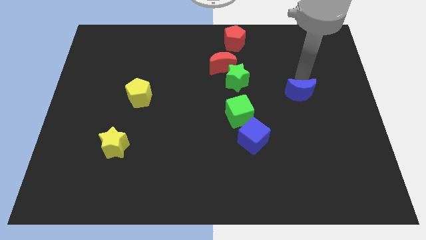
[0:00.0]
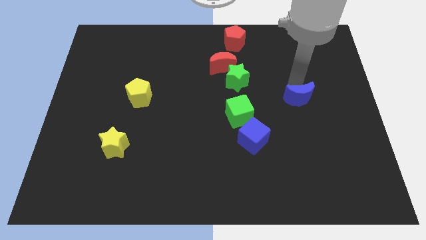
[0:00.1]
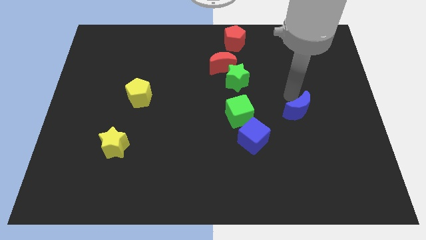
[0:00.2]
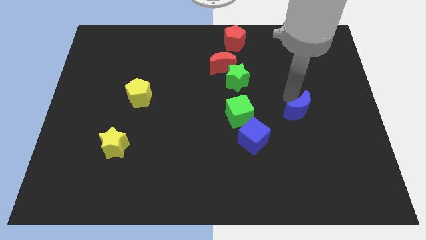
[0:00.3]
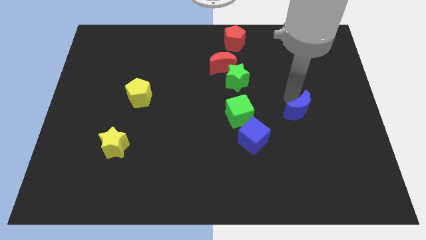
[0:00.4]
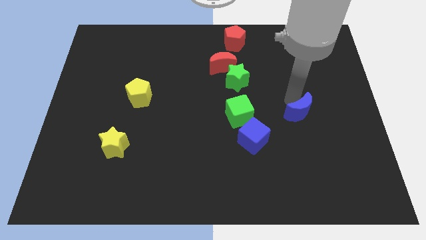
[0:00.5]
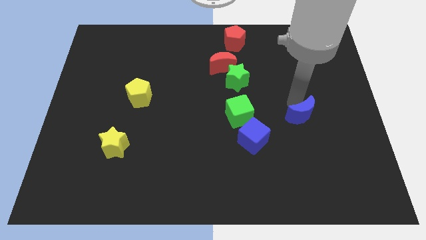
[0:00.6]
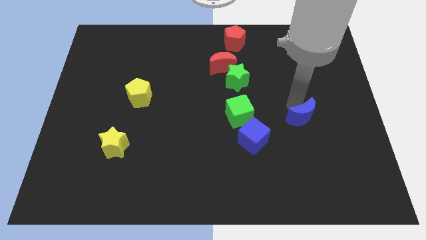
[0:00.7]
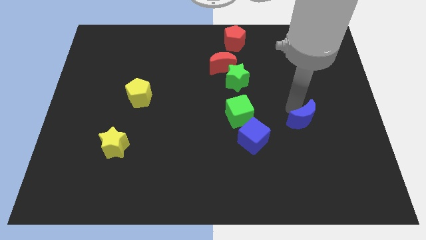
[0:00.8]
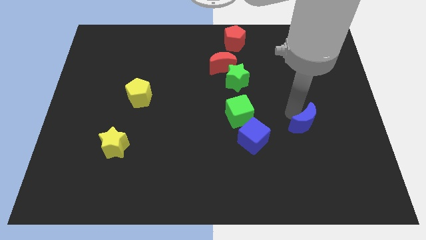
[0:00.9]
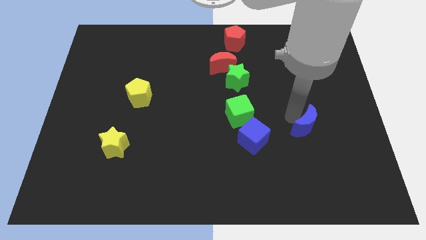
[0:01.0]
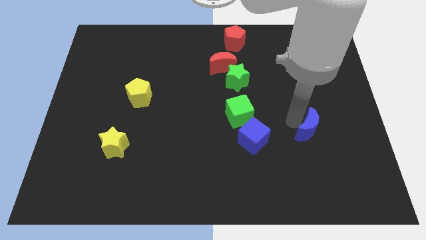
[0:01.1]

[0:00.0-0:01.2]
move the blue moon downward

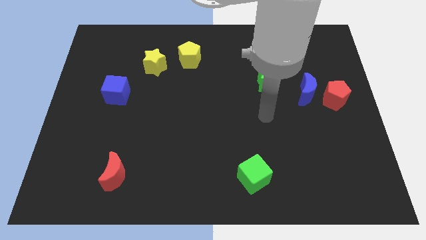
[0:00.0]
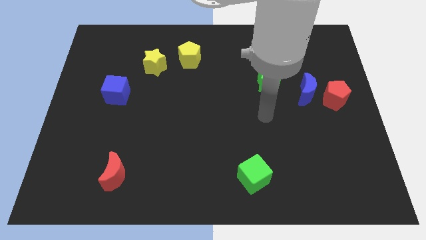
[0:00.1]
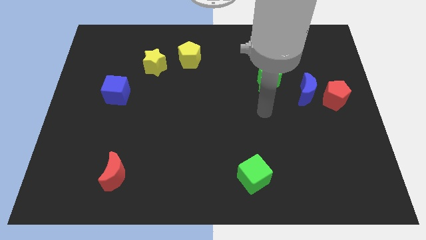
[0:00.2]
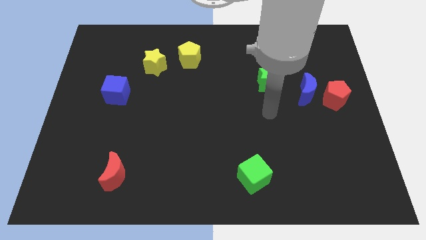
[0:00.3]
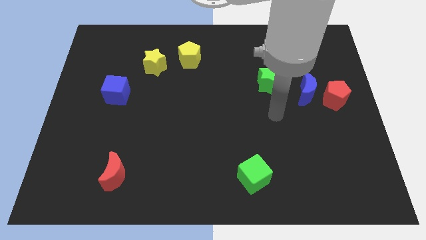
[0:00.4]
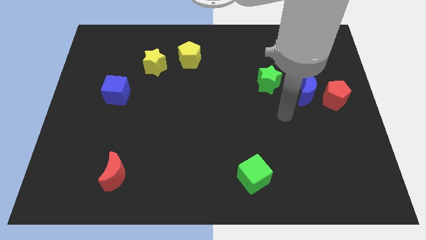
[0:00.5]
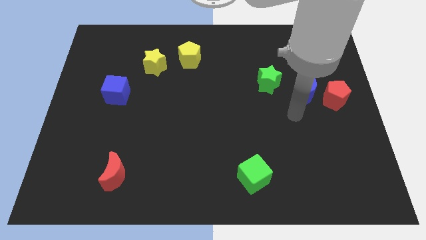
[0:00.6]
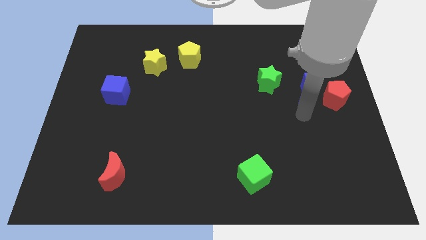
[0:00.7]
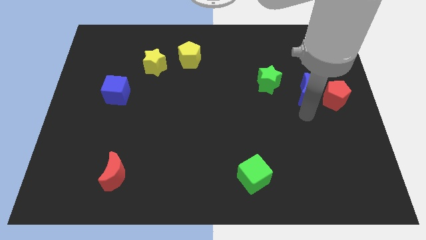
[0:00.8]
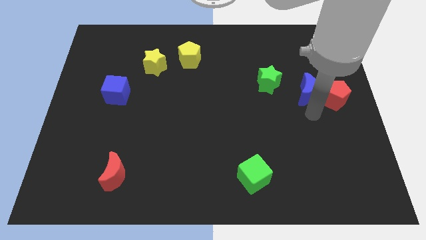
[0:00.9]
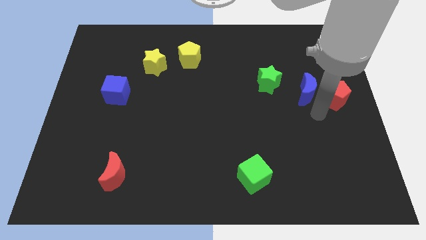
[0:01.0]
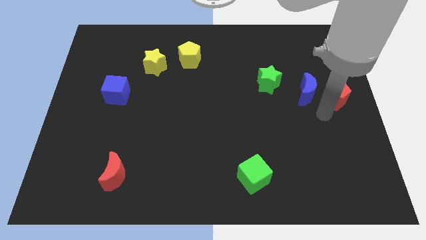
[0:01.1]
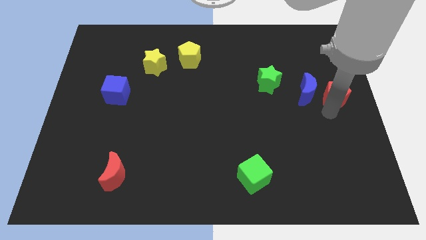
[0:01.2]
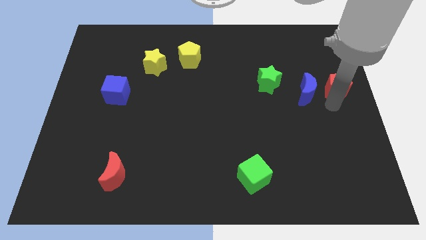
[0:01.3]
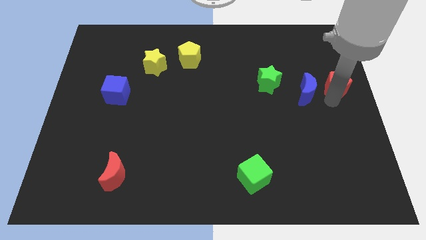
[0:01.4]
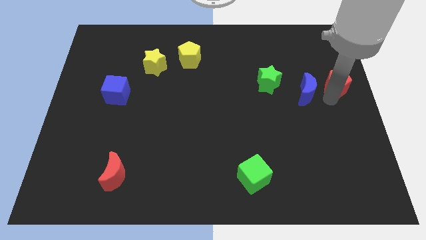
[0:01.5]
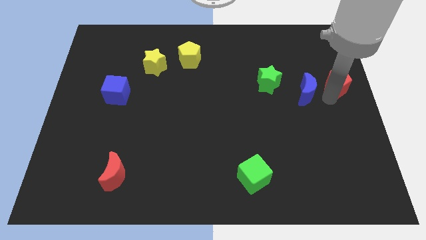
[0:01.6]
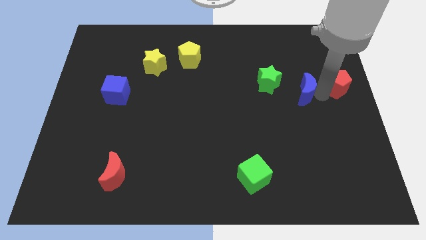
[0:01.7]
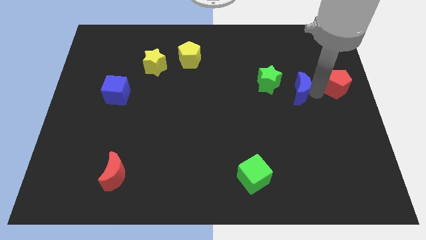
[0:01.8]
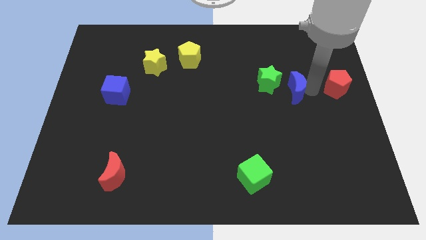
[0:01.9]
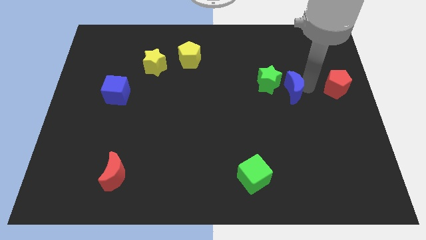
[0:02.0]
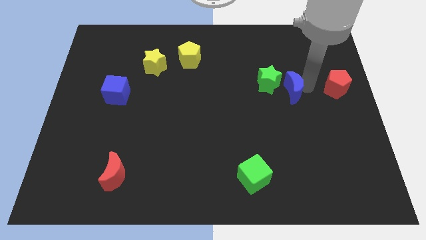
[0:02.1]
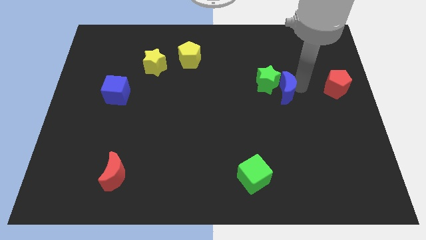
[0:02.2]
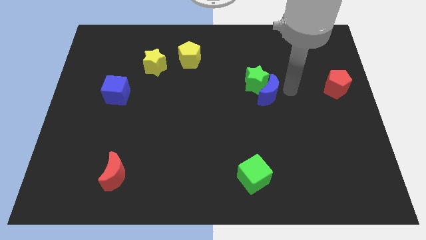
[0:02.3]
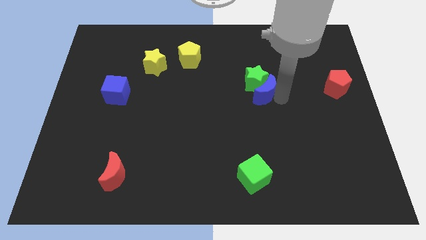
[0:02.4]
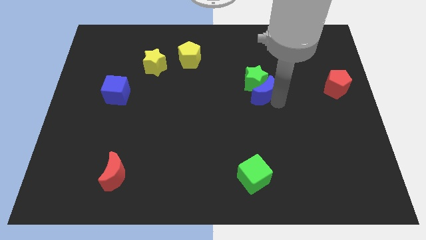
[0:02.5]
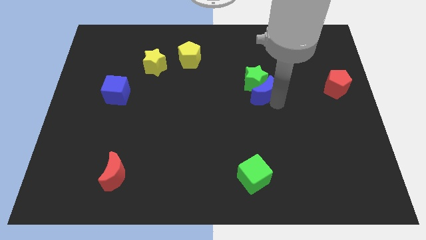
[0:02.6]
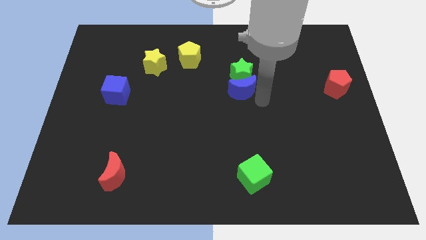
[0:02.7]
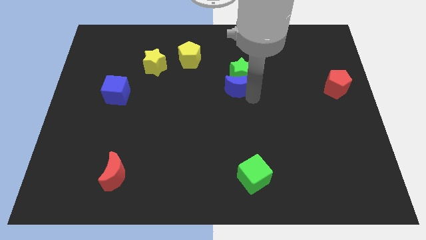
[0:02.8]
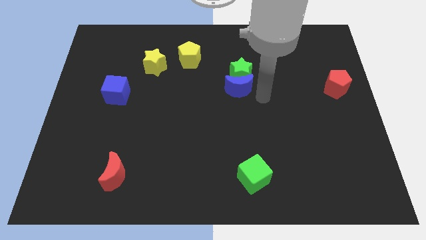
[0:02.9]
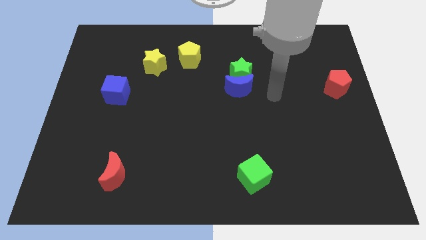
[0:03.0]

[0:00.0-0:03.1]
place the blue crescent at the bottom side of the green star

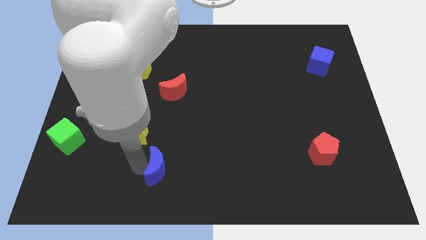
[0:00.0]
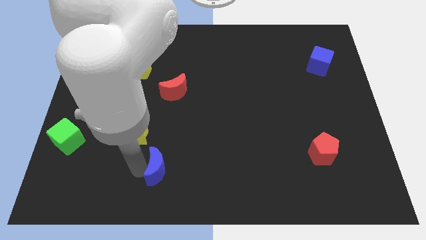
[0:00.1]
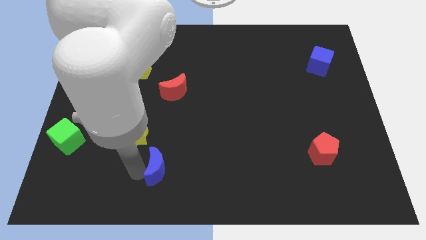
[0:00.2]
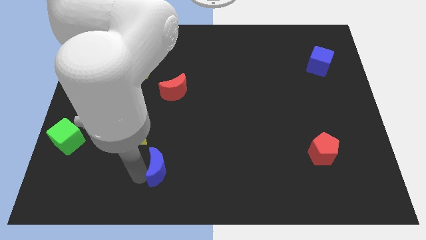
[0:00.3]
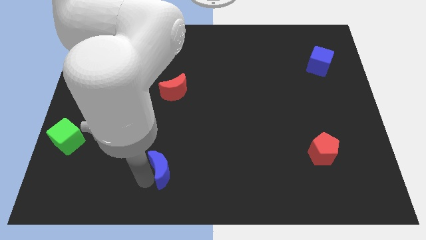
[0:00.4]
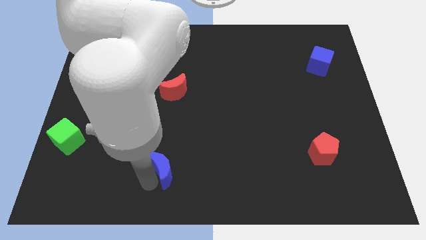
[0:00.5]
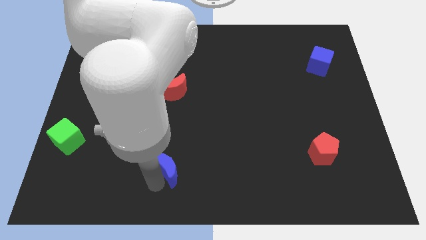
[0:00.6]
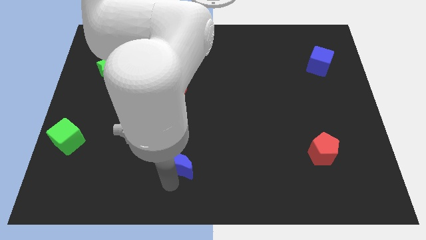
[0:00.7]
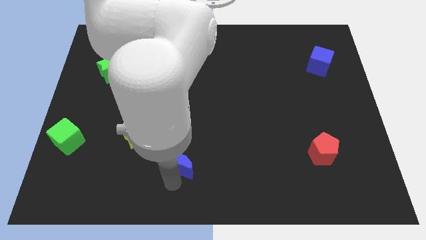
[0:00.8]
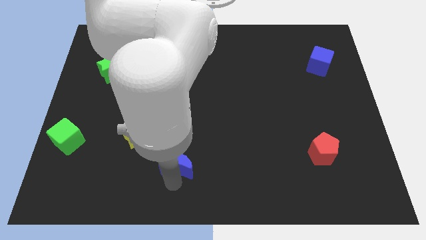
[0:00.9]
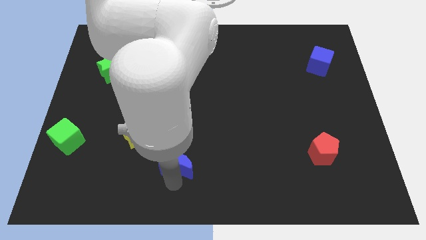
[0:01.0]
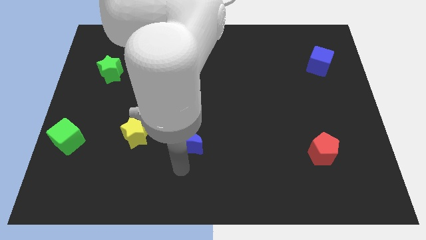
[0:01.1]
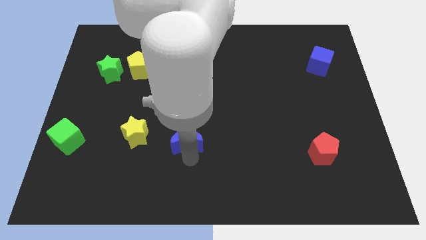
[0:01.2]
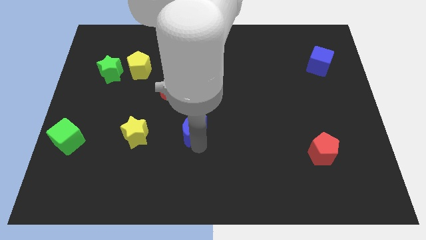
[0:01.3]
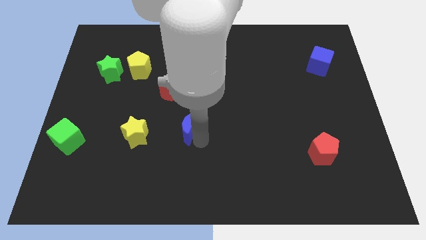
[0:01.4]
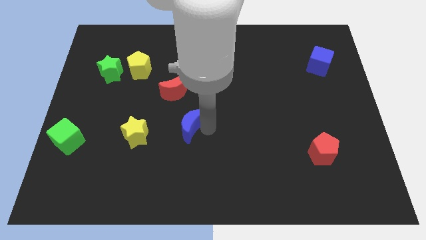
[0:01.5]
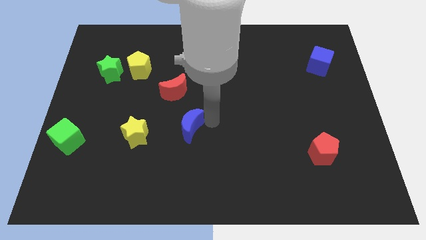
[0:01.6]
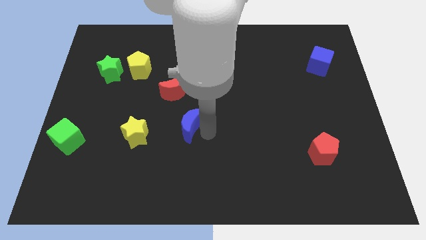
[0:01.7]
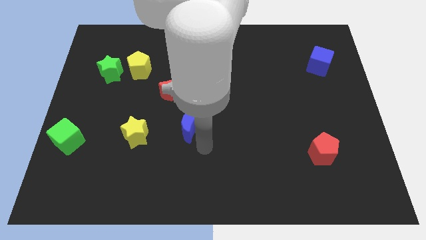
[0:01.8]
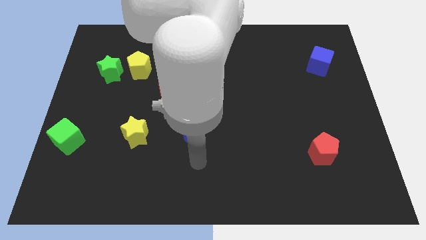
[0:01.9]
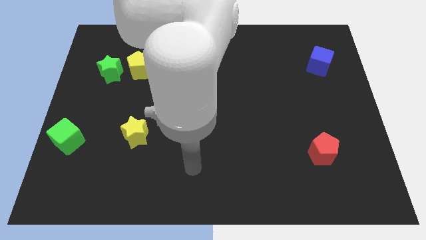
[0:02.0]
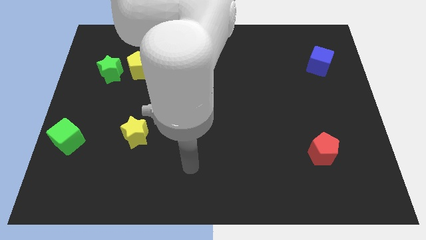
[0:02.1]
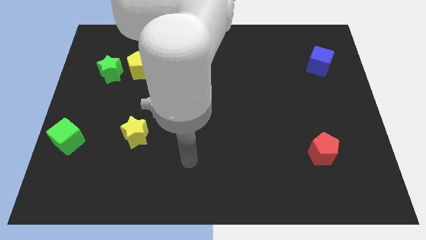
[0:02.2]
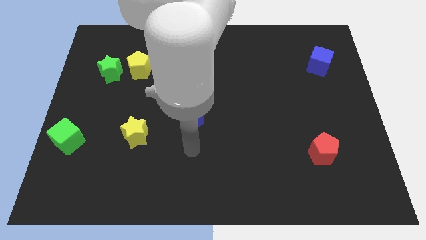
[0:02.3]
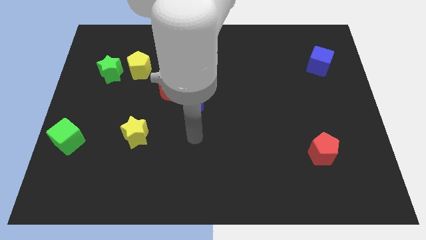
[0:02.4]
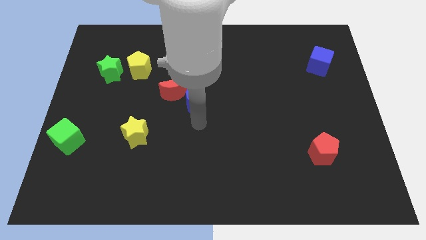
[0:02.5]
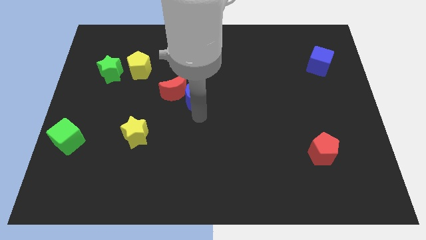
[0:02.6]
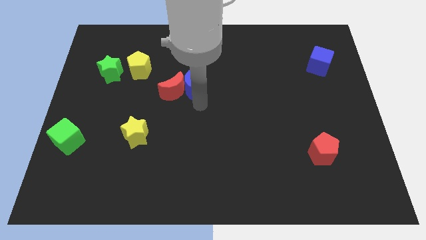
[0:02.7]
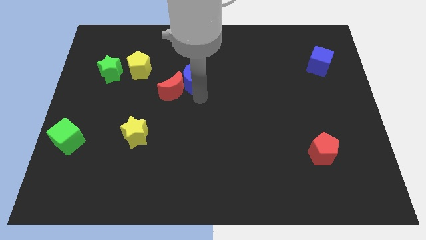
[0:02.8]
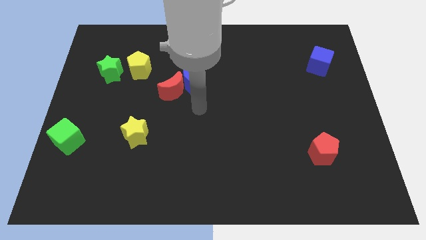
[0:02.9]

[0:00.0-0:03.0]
move blue moon into the red moon

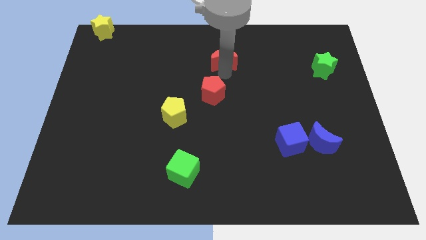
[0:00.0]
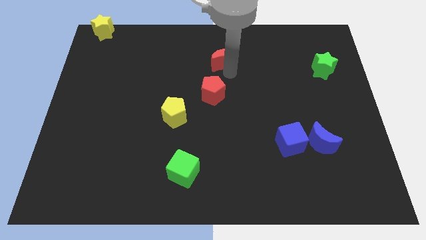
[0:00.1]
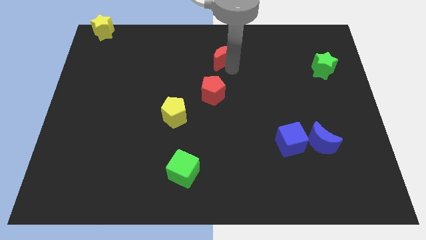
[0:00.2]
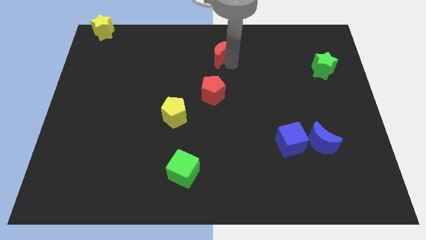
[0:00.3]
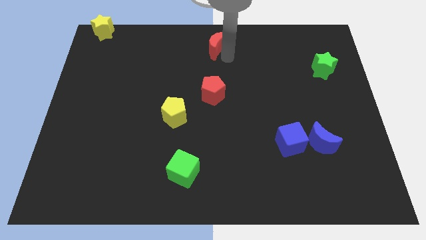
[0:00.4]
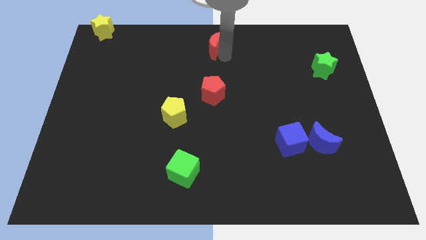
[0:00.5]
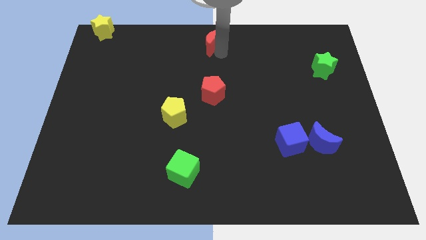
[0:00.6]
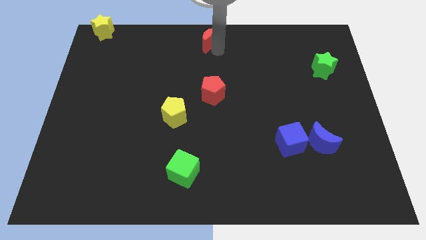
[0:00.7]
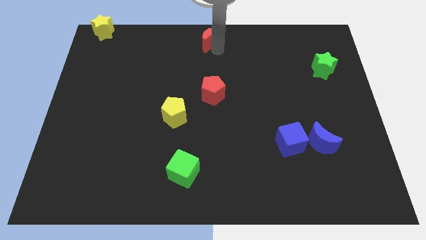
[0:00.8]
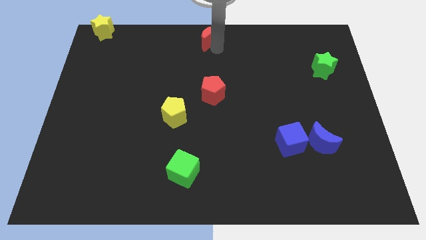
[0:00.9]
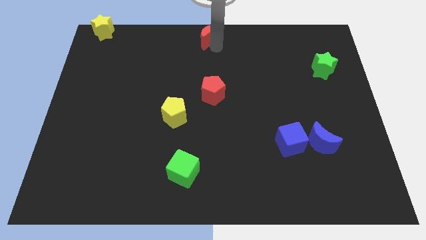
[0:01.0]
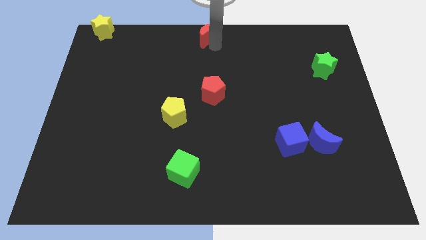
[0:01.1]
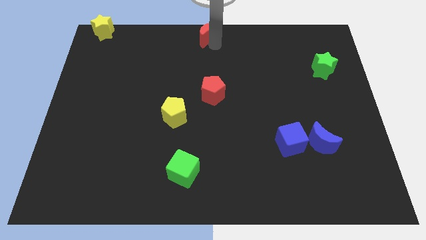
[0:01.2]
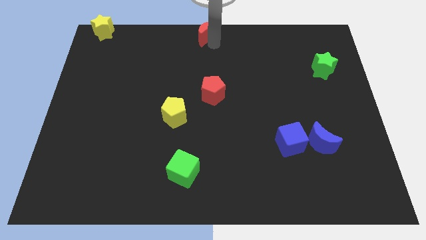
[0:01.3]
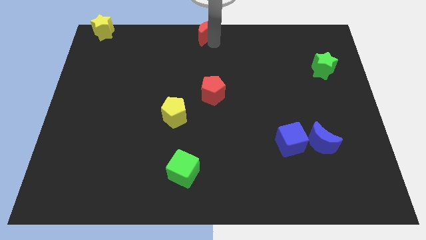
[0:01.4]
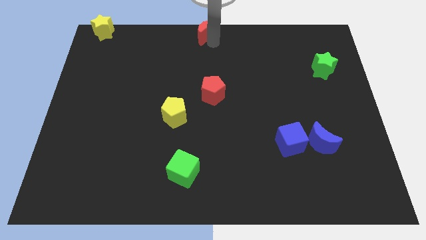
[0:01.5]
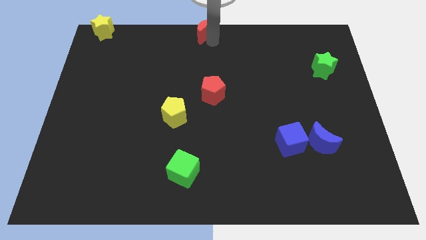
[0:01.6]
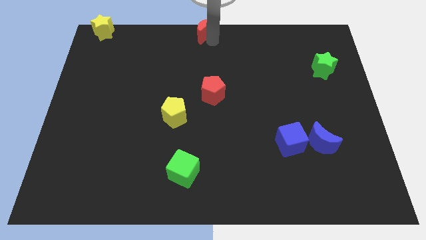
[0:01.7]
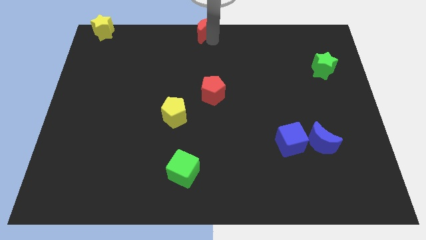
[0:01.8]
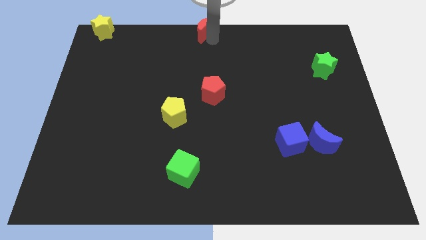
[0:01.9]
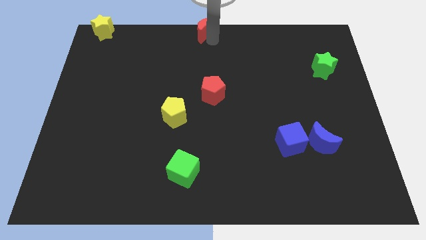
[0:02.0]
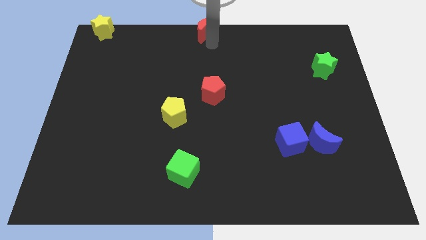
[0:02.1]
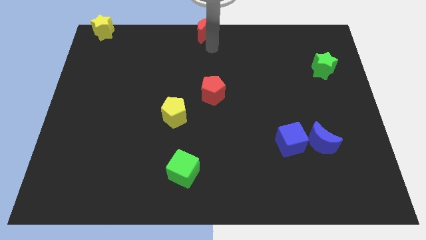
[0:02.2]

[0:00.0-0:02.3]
move the red moon to the top side center
